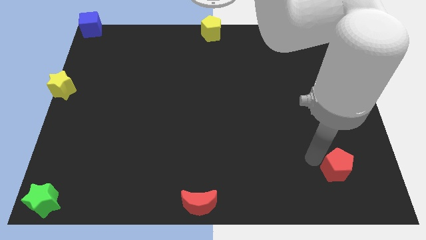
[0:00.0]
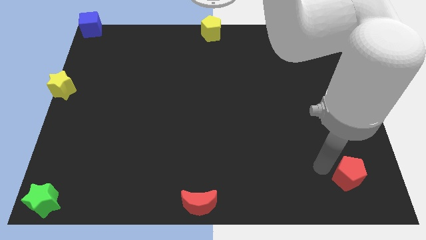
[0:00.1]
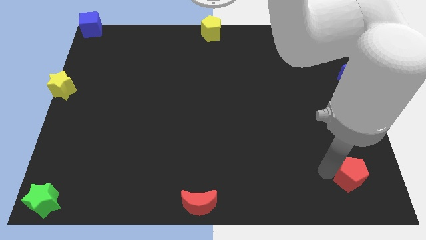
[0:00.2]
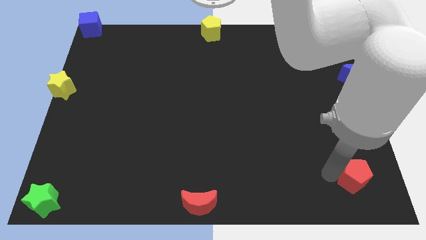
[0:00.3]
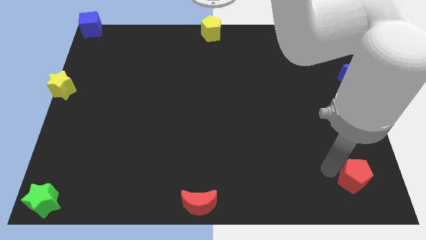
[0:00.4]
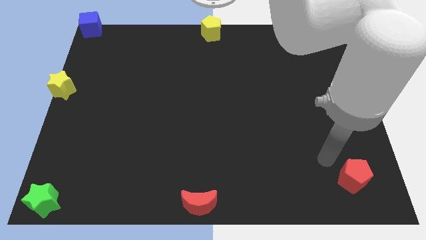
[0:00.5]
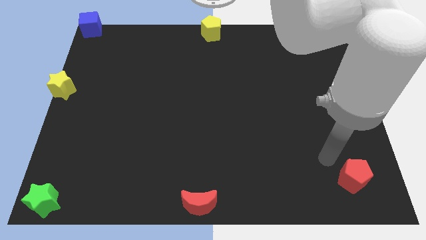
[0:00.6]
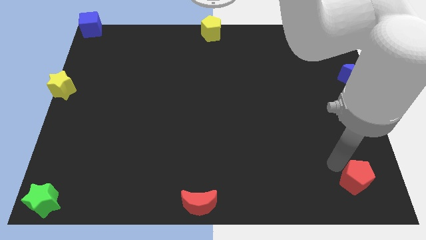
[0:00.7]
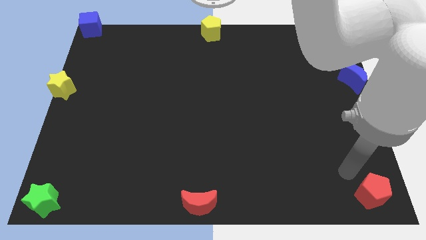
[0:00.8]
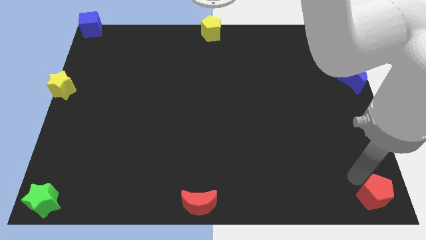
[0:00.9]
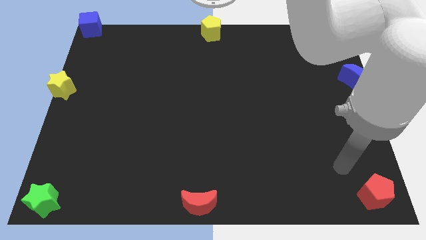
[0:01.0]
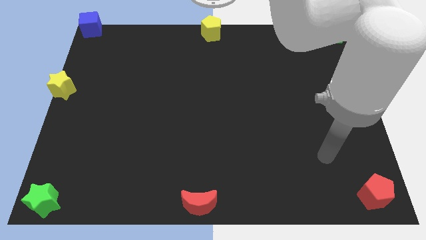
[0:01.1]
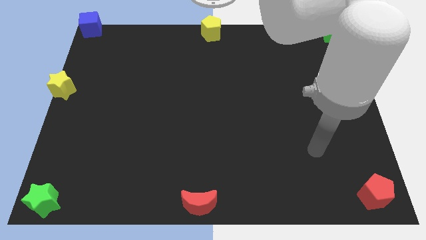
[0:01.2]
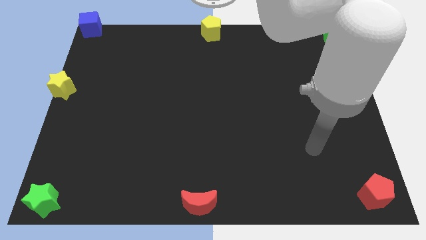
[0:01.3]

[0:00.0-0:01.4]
push the red pentagon bottom right corner of the board

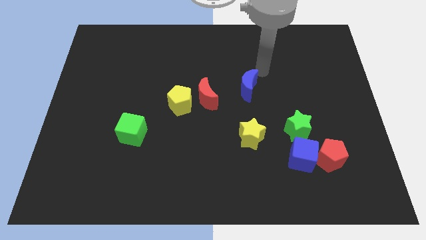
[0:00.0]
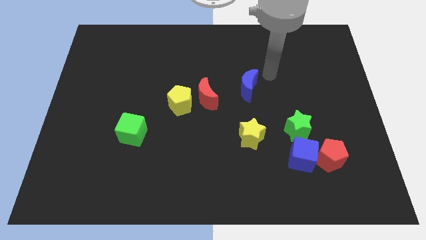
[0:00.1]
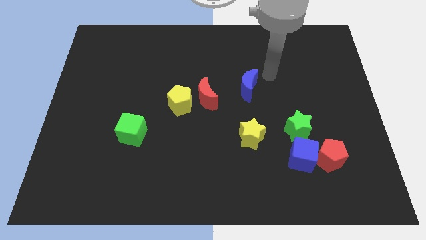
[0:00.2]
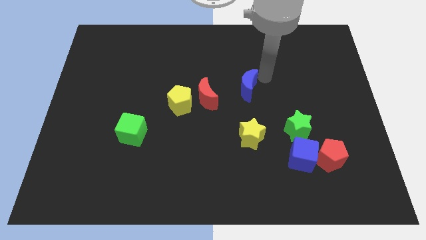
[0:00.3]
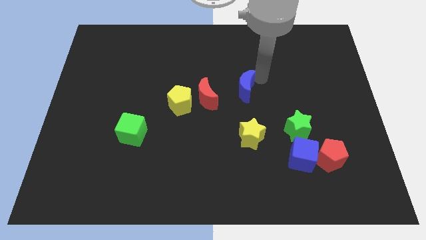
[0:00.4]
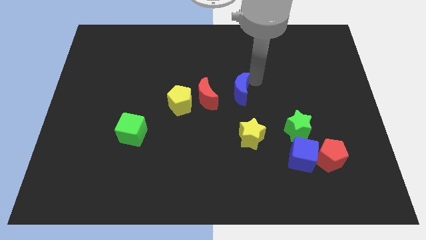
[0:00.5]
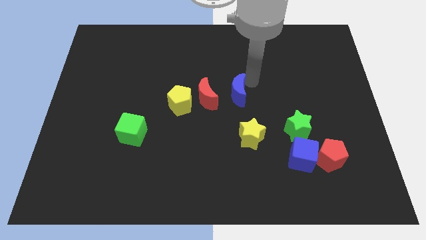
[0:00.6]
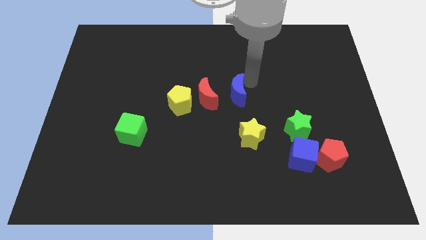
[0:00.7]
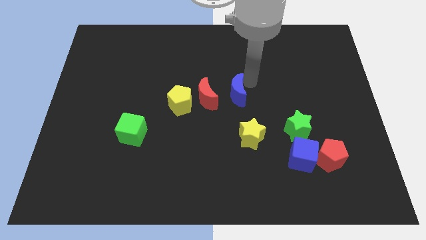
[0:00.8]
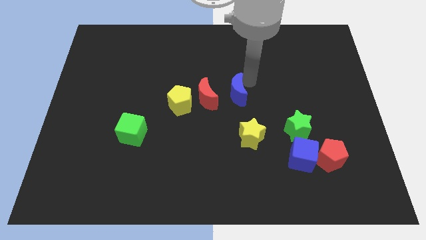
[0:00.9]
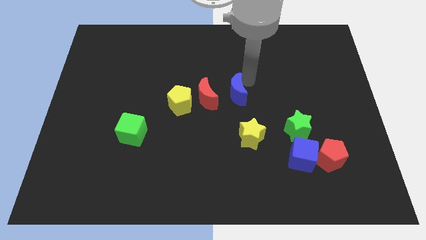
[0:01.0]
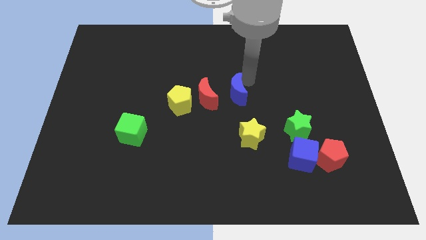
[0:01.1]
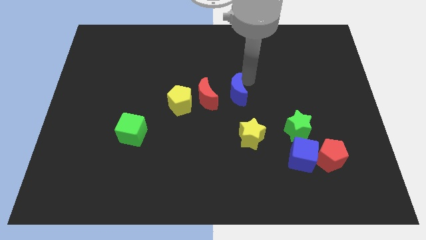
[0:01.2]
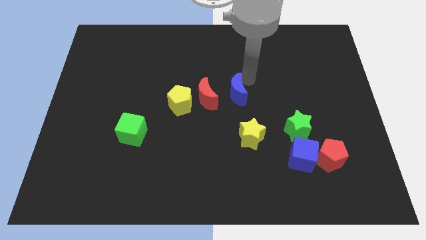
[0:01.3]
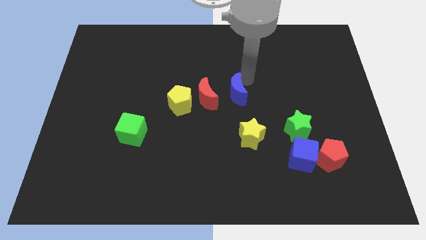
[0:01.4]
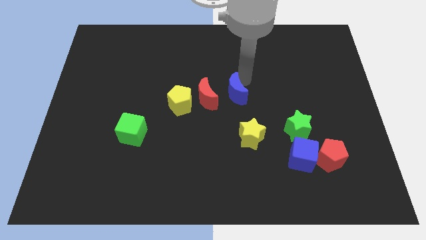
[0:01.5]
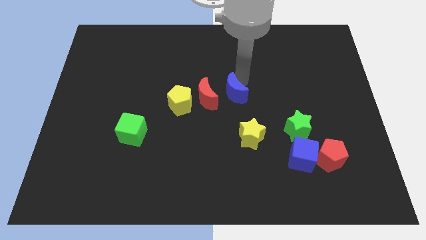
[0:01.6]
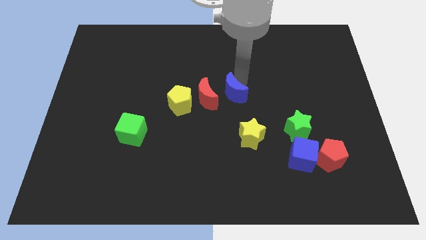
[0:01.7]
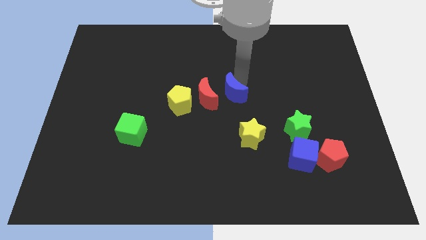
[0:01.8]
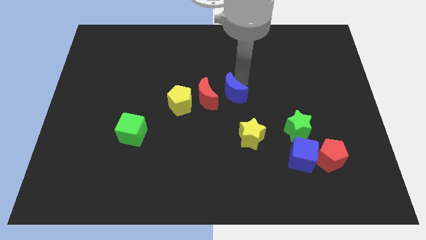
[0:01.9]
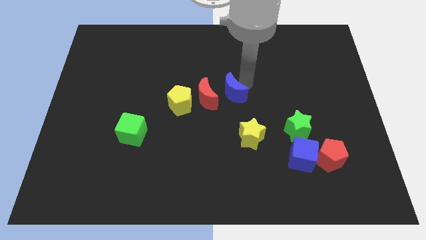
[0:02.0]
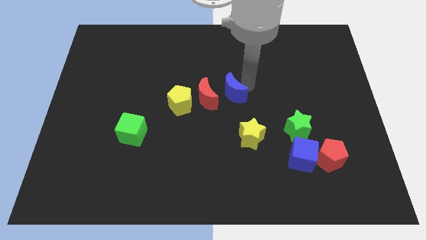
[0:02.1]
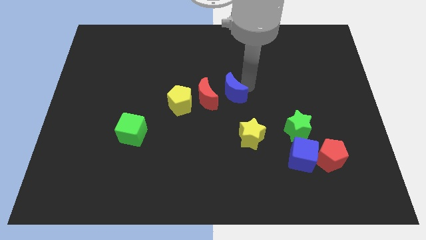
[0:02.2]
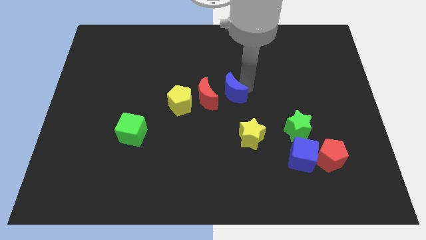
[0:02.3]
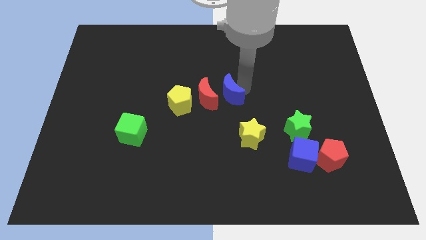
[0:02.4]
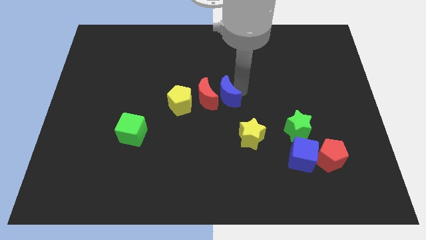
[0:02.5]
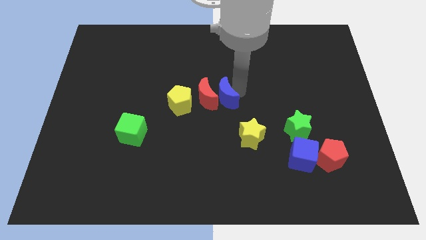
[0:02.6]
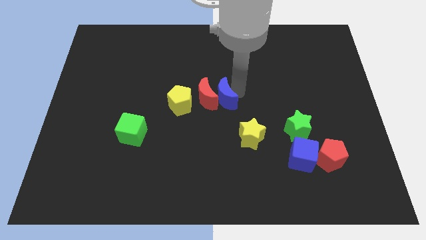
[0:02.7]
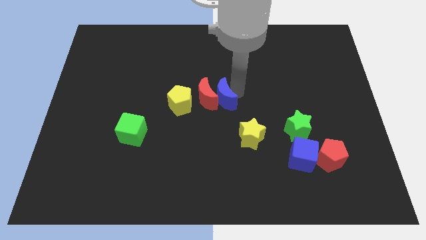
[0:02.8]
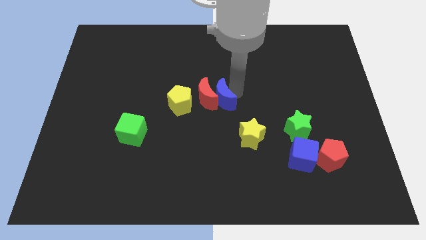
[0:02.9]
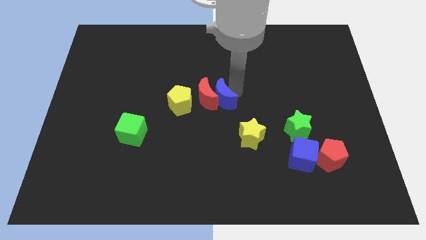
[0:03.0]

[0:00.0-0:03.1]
move blue moon into red moon

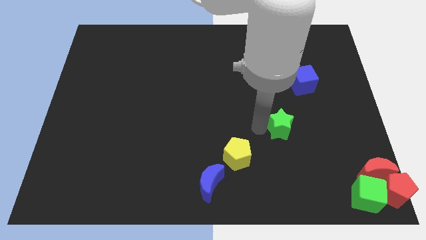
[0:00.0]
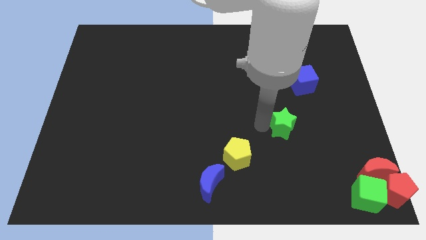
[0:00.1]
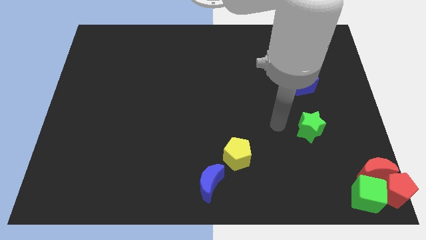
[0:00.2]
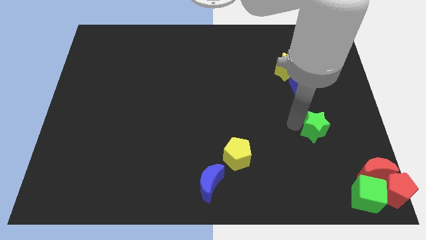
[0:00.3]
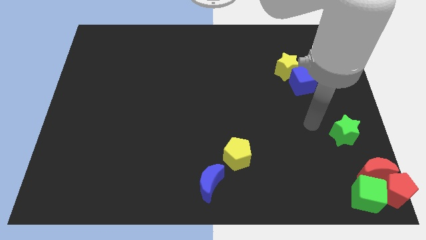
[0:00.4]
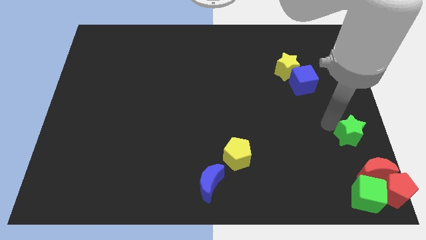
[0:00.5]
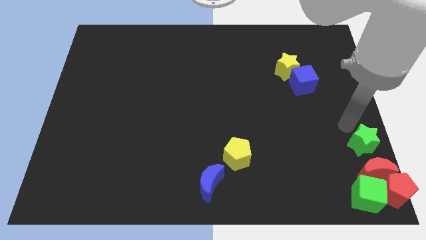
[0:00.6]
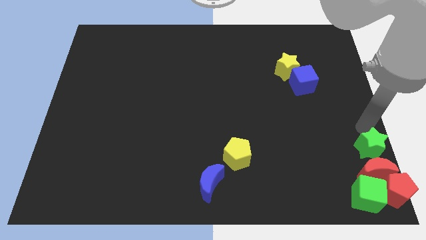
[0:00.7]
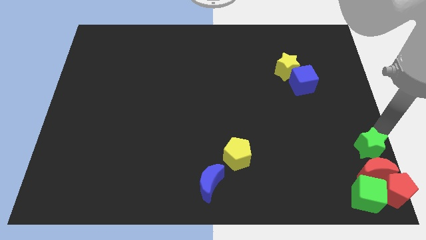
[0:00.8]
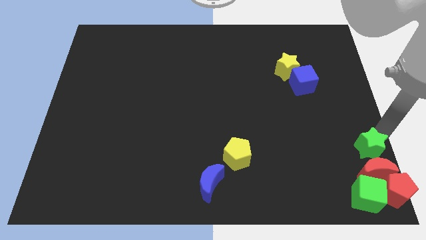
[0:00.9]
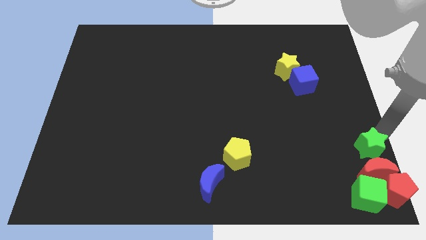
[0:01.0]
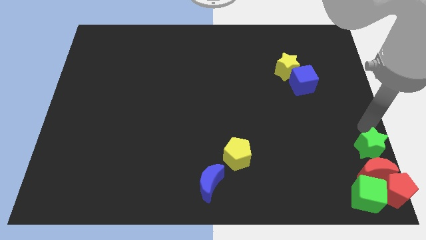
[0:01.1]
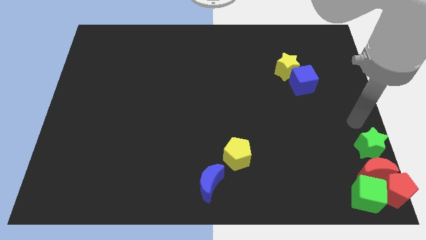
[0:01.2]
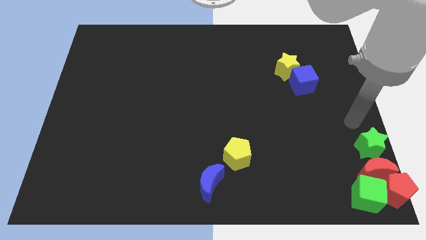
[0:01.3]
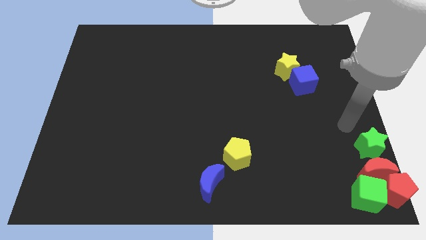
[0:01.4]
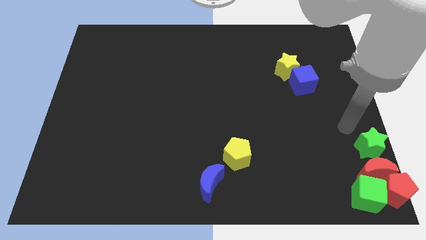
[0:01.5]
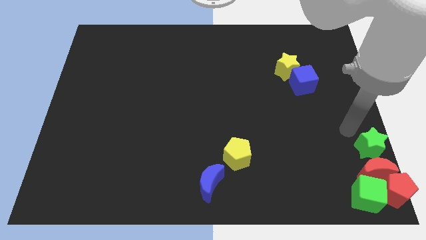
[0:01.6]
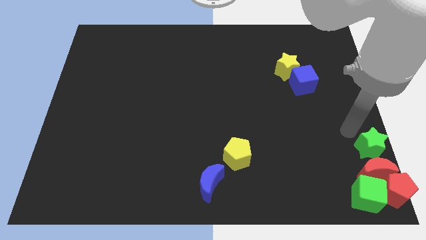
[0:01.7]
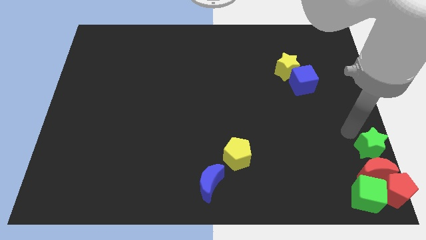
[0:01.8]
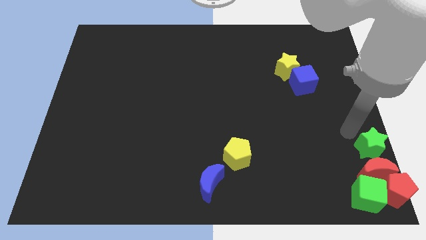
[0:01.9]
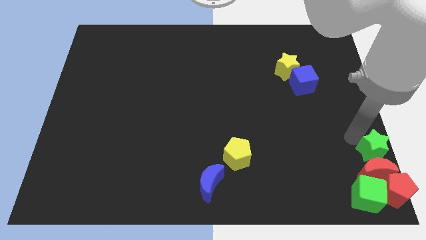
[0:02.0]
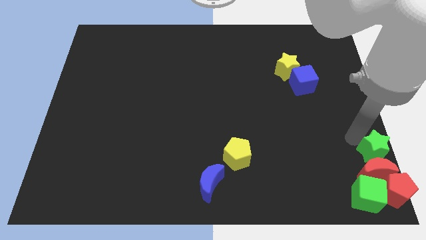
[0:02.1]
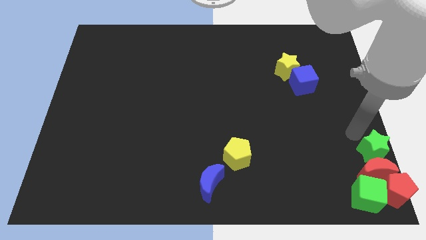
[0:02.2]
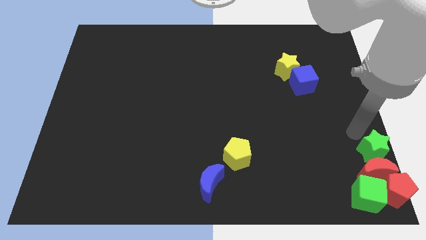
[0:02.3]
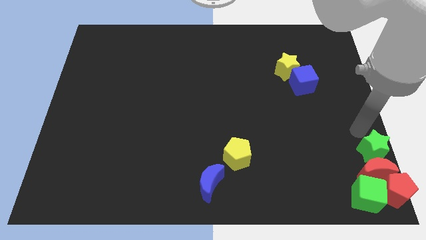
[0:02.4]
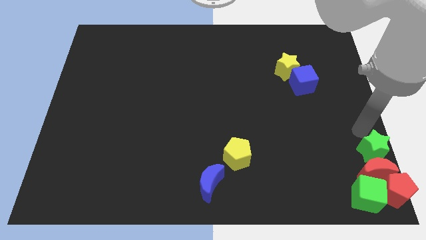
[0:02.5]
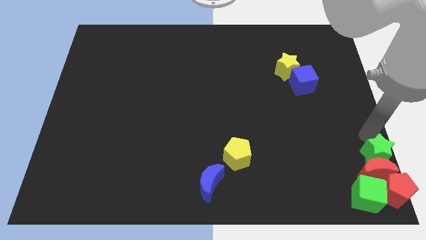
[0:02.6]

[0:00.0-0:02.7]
push green star above red crescent

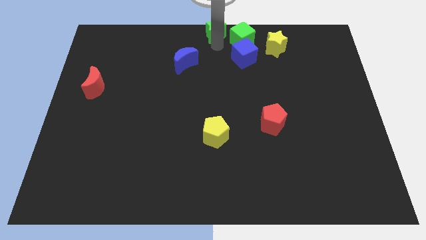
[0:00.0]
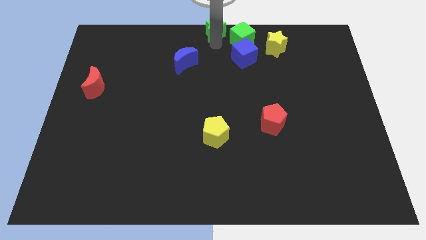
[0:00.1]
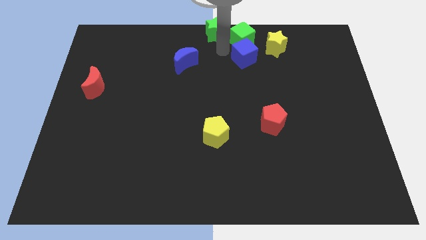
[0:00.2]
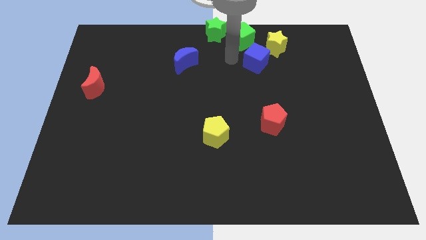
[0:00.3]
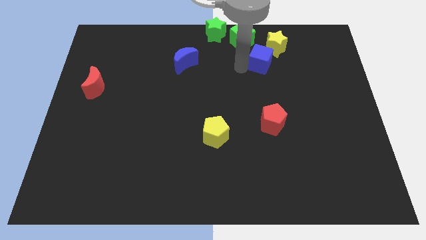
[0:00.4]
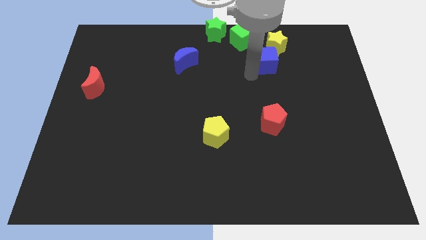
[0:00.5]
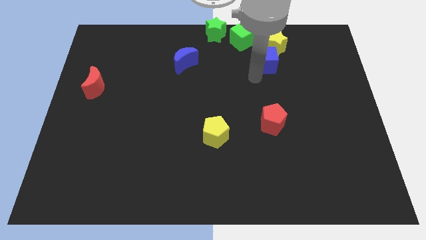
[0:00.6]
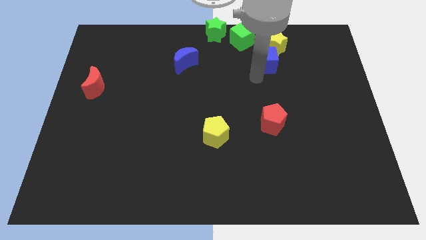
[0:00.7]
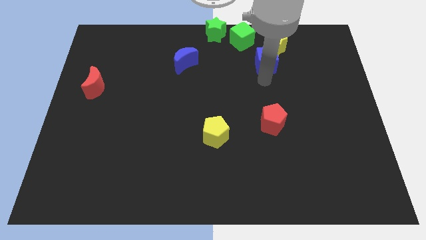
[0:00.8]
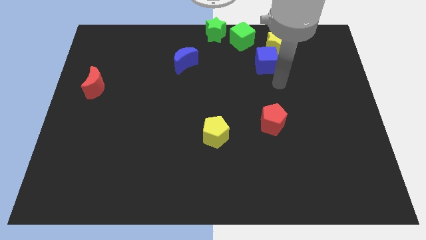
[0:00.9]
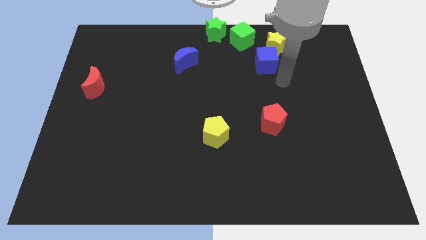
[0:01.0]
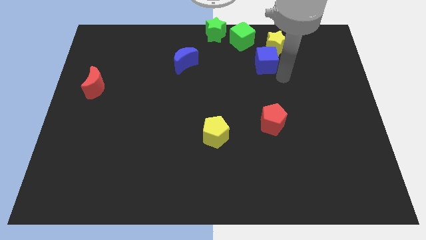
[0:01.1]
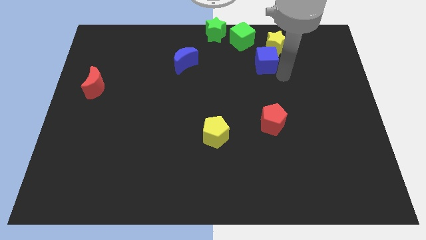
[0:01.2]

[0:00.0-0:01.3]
place the blue cube below the yellow star

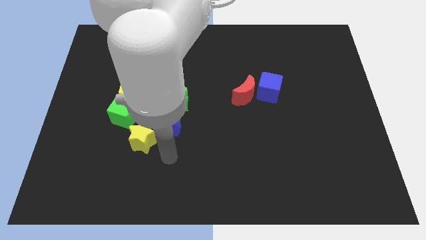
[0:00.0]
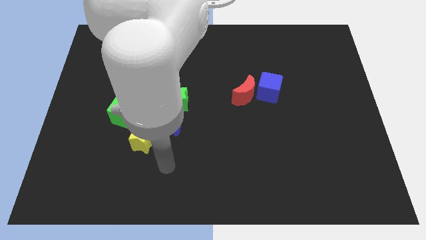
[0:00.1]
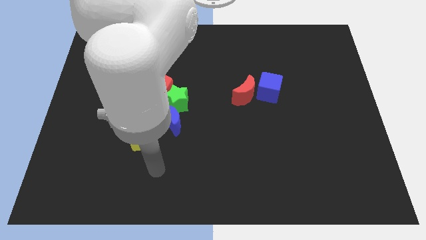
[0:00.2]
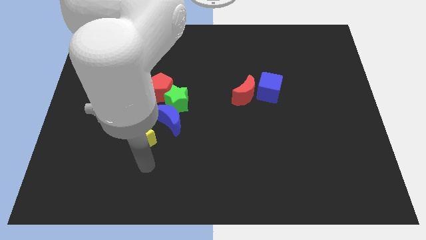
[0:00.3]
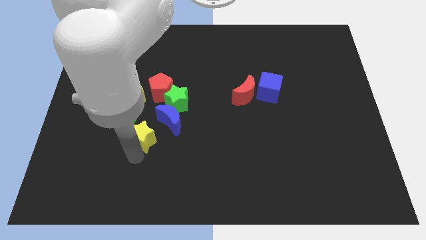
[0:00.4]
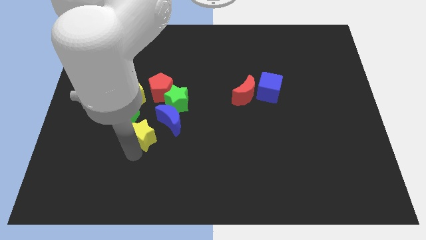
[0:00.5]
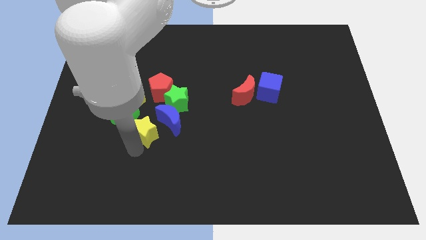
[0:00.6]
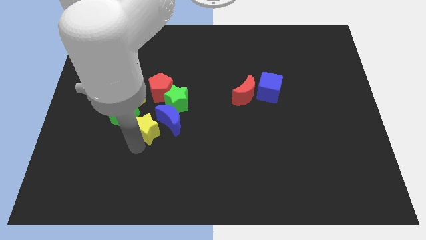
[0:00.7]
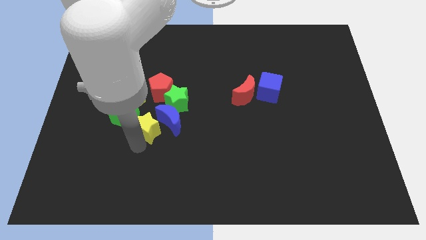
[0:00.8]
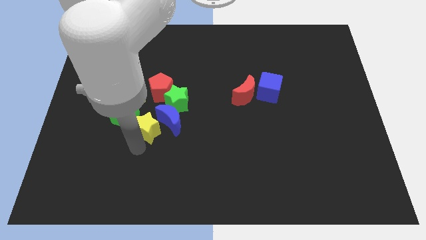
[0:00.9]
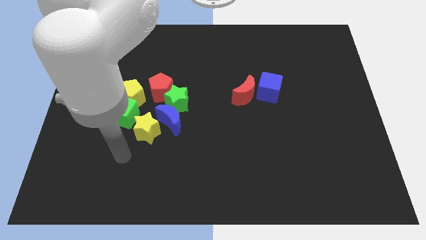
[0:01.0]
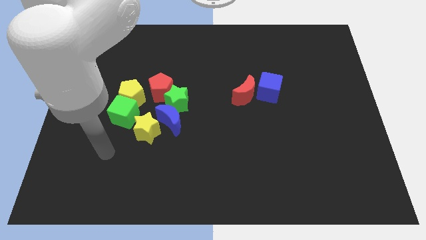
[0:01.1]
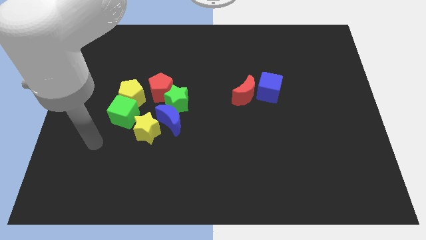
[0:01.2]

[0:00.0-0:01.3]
slightly move the yellow star upwards
